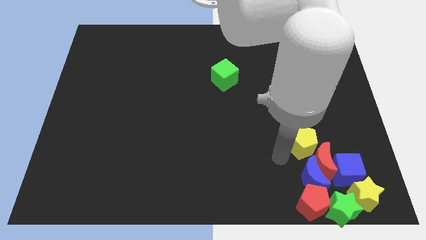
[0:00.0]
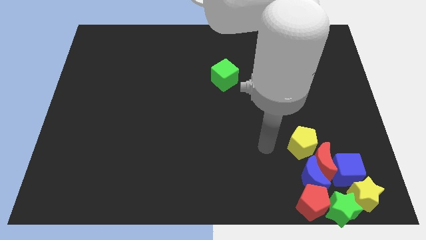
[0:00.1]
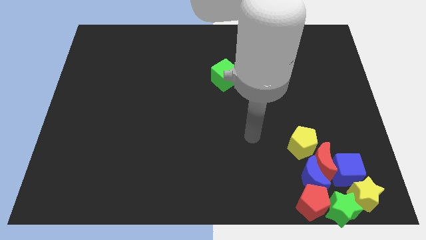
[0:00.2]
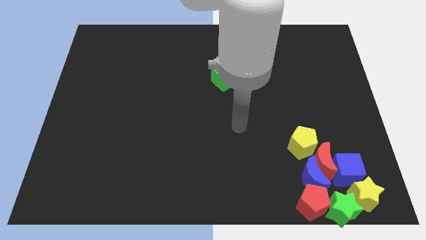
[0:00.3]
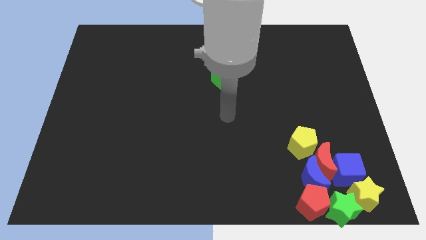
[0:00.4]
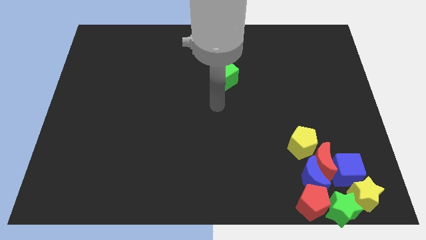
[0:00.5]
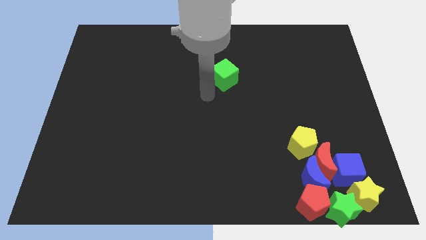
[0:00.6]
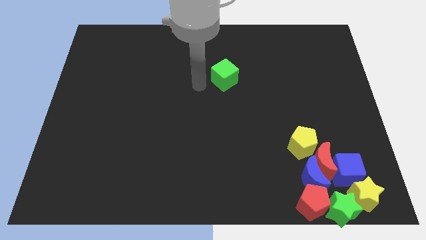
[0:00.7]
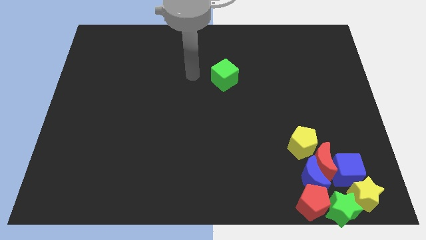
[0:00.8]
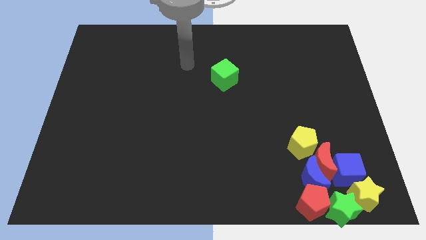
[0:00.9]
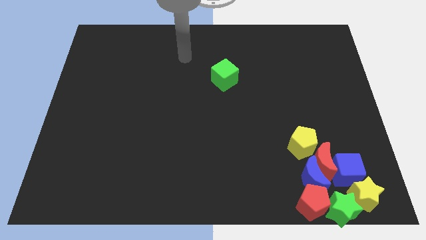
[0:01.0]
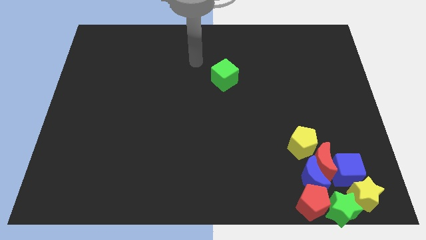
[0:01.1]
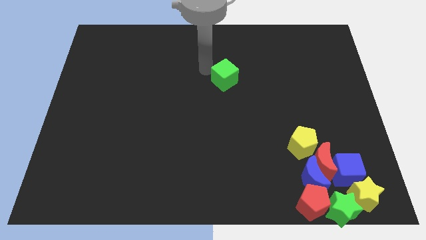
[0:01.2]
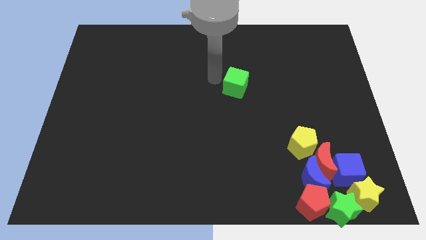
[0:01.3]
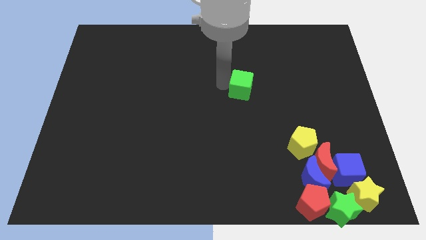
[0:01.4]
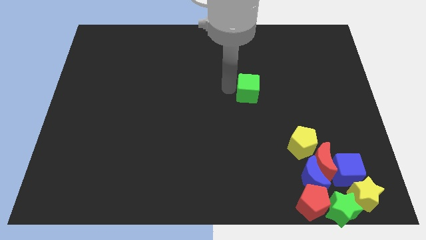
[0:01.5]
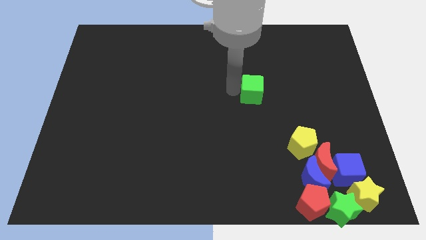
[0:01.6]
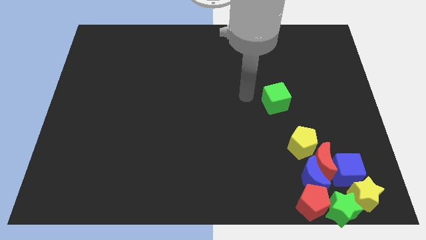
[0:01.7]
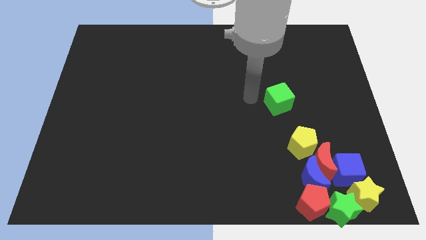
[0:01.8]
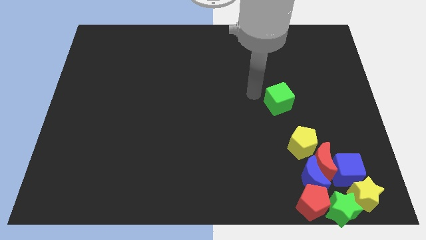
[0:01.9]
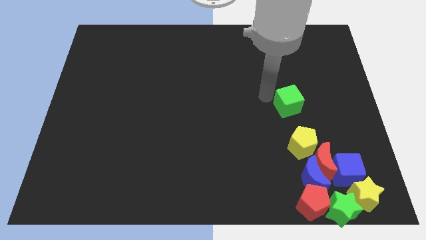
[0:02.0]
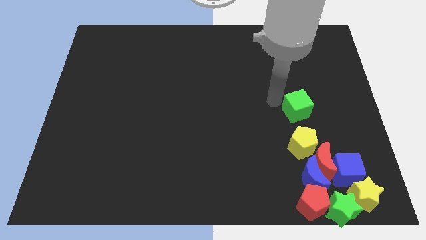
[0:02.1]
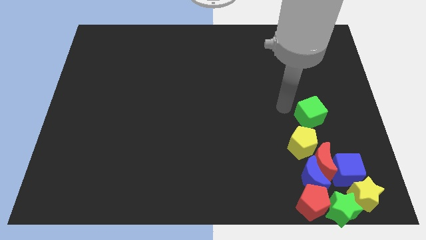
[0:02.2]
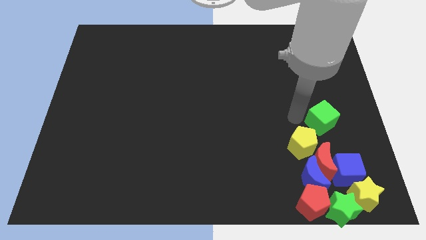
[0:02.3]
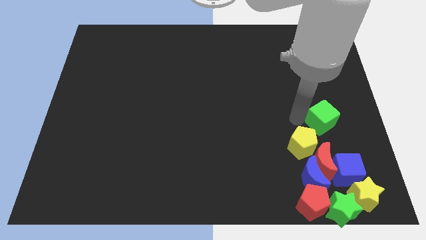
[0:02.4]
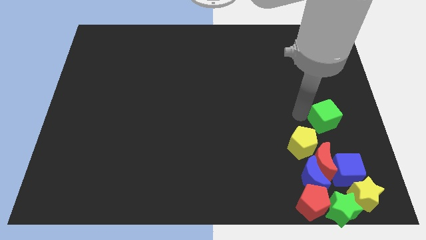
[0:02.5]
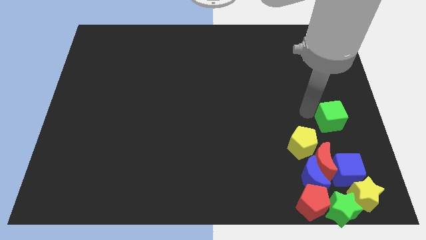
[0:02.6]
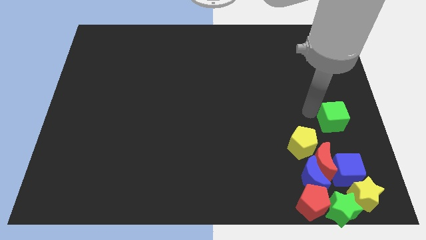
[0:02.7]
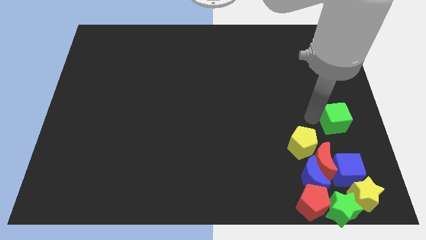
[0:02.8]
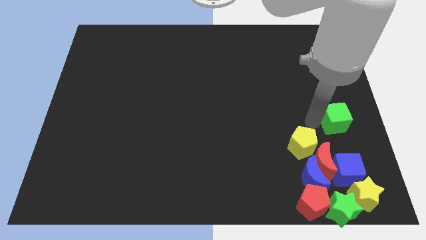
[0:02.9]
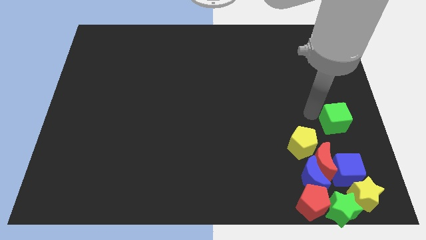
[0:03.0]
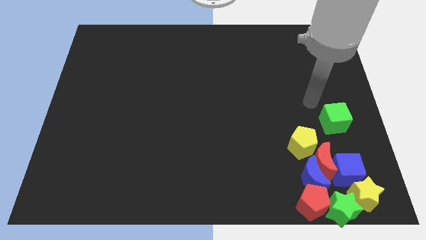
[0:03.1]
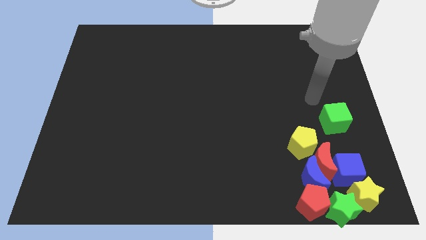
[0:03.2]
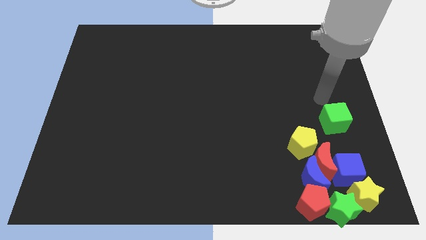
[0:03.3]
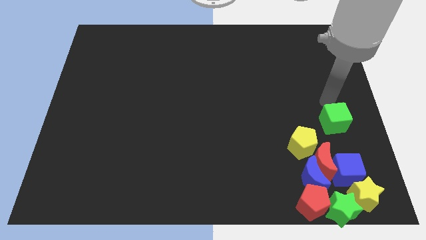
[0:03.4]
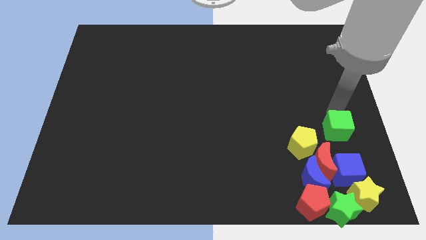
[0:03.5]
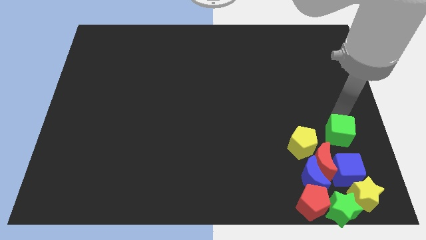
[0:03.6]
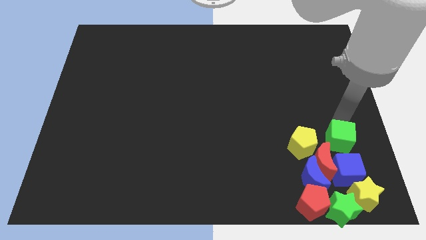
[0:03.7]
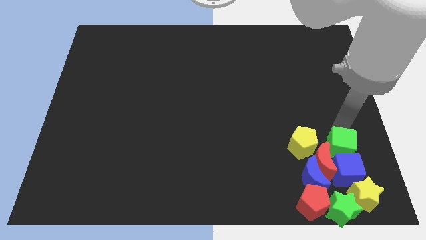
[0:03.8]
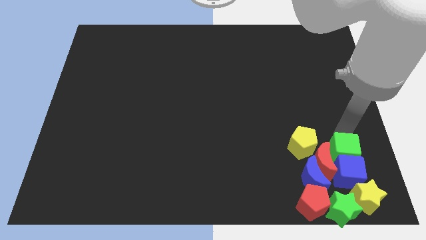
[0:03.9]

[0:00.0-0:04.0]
move the green cube into the top side of the blue cube

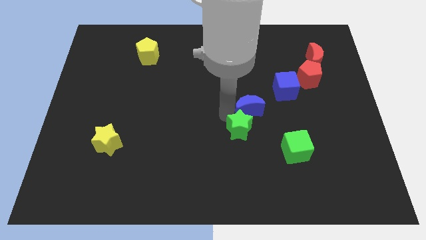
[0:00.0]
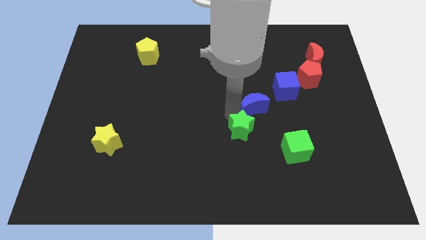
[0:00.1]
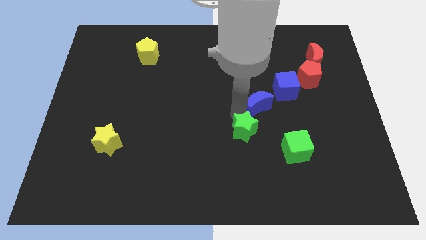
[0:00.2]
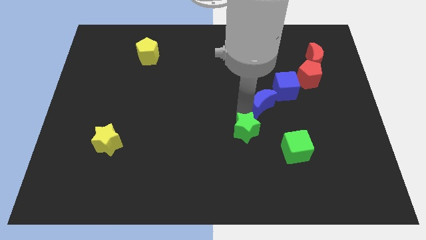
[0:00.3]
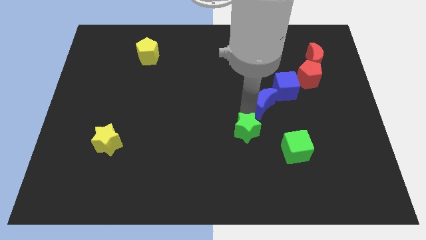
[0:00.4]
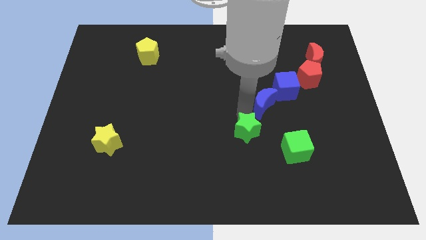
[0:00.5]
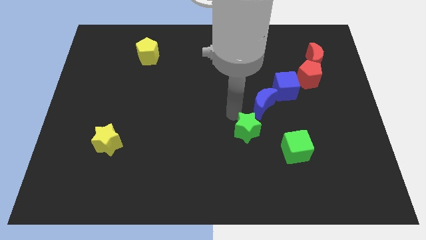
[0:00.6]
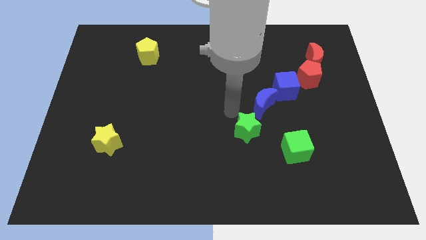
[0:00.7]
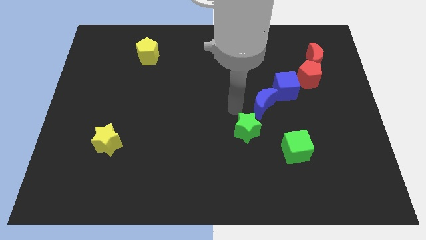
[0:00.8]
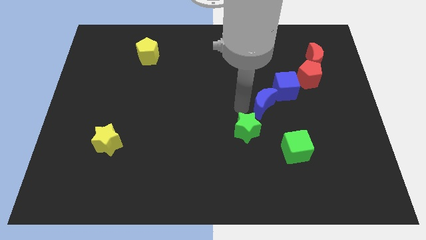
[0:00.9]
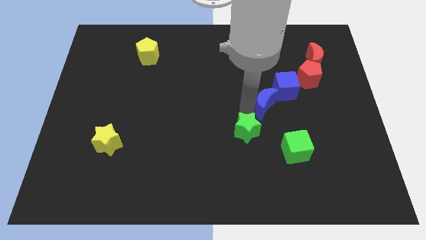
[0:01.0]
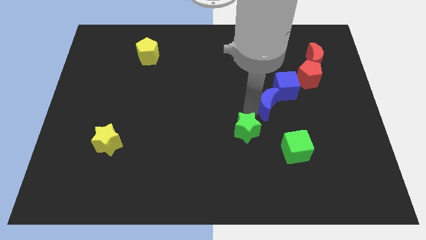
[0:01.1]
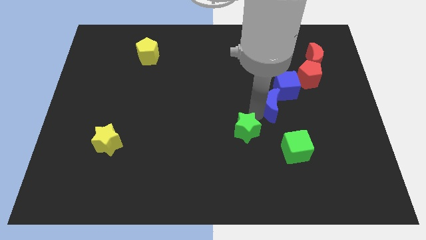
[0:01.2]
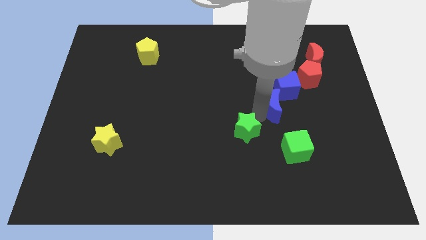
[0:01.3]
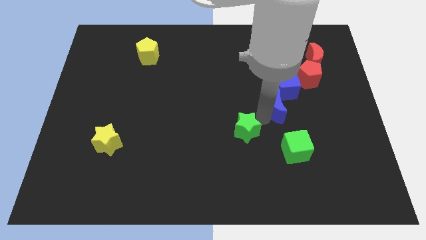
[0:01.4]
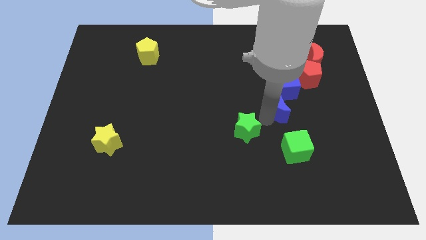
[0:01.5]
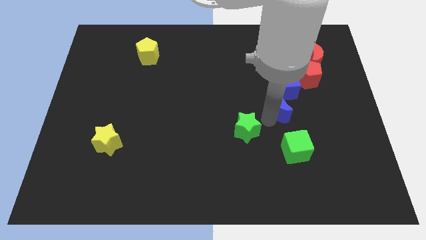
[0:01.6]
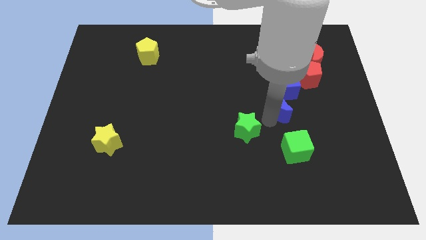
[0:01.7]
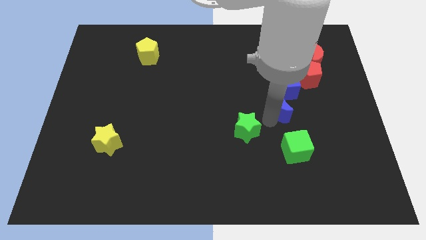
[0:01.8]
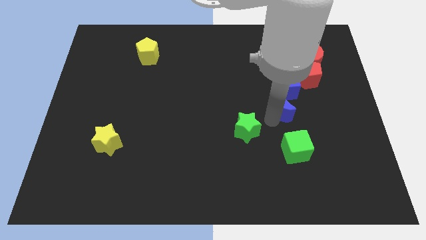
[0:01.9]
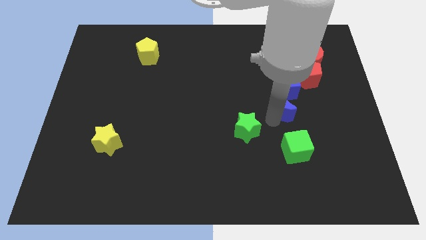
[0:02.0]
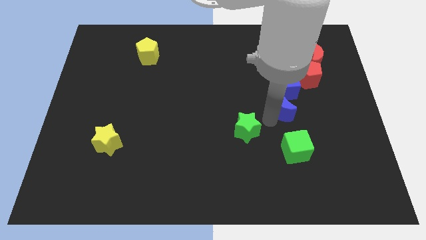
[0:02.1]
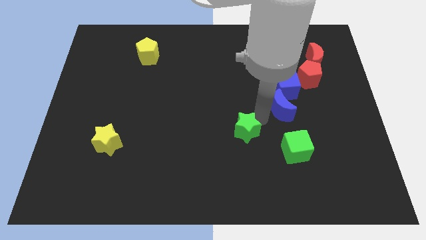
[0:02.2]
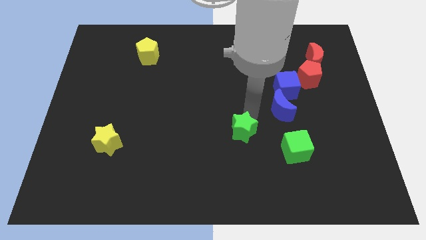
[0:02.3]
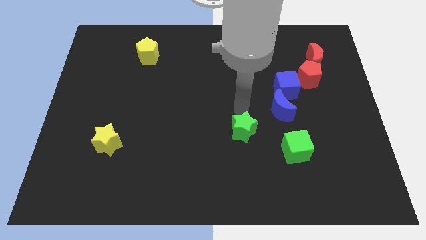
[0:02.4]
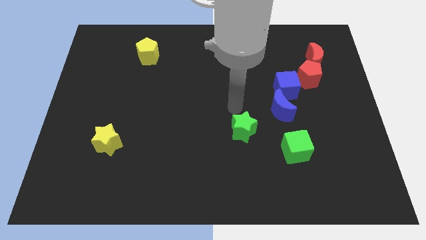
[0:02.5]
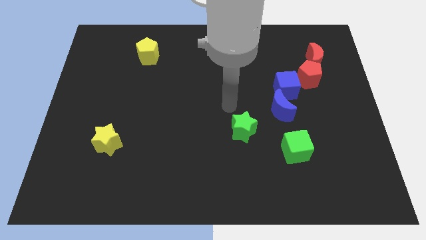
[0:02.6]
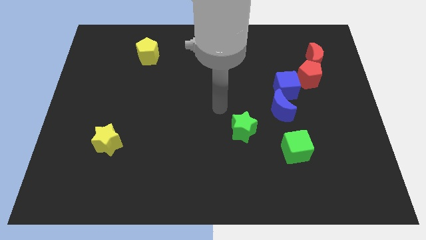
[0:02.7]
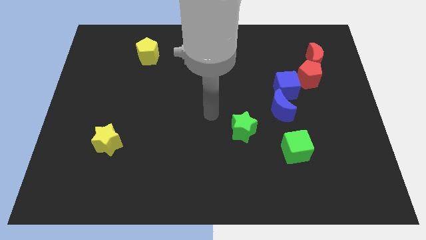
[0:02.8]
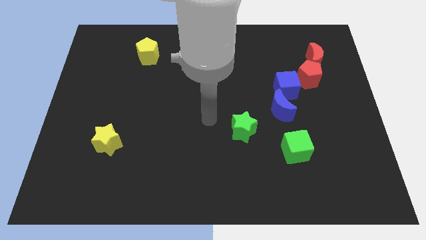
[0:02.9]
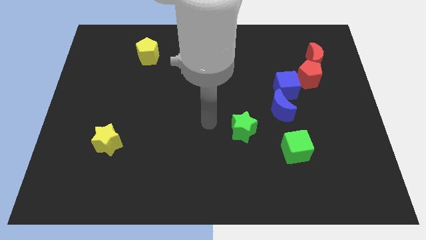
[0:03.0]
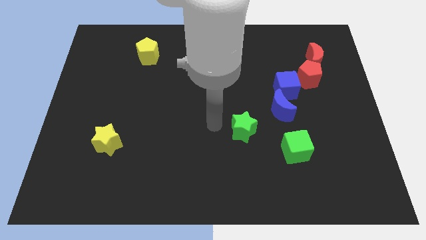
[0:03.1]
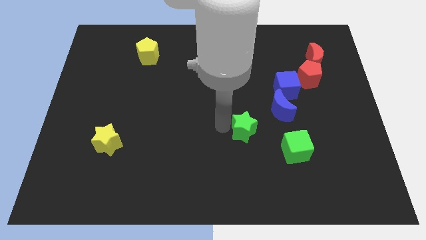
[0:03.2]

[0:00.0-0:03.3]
separate green star and the blue moon

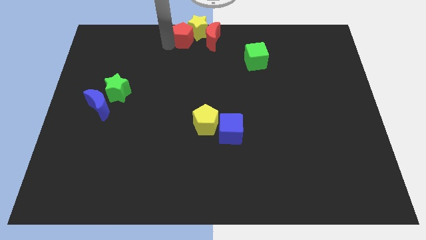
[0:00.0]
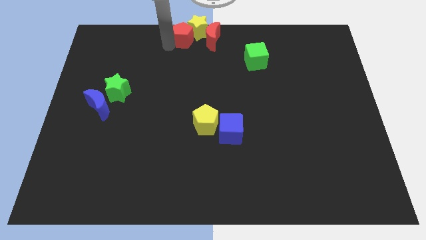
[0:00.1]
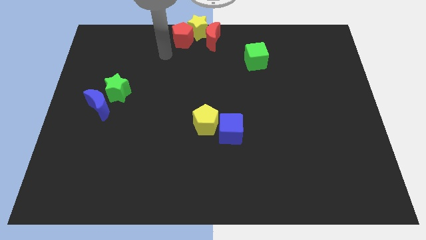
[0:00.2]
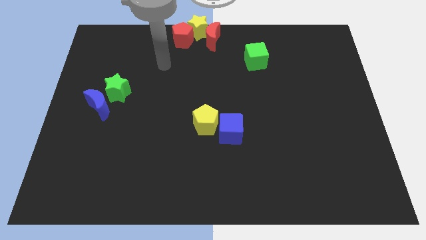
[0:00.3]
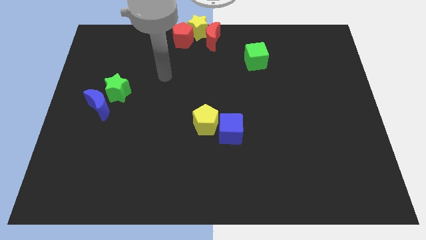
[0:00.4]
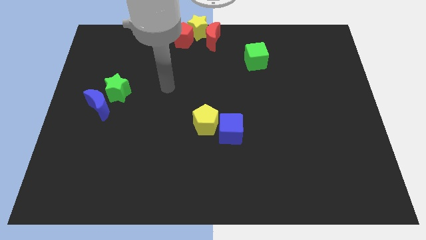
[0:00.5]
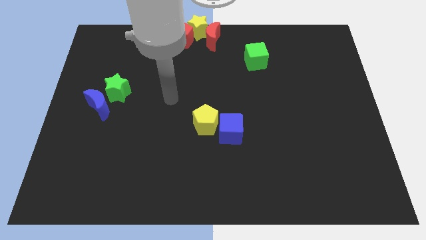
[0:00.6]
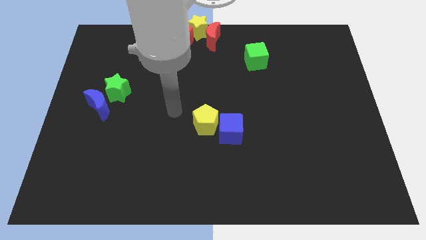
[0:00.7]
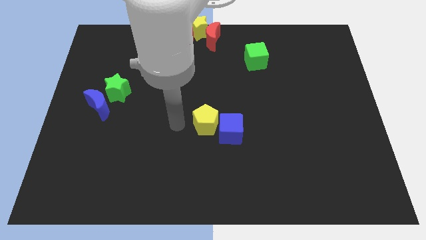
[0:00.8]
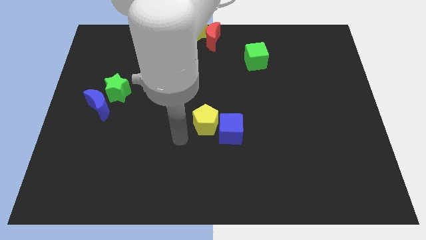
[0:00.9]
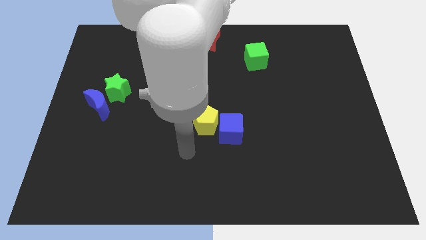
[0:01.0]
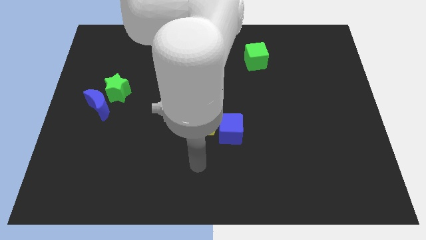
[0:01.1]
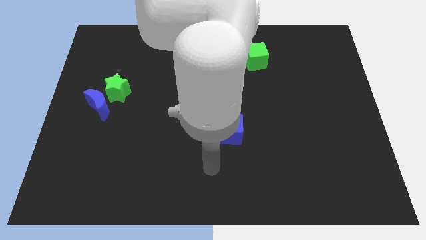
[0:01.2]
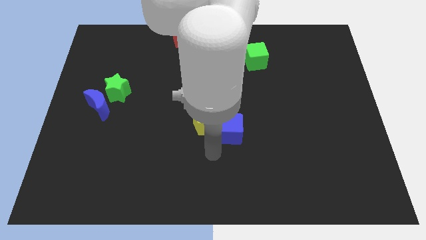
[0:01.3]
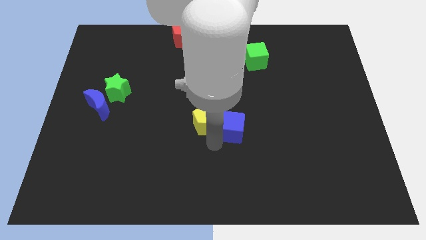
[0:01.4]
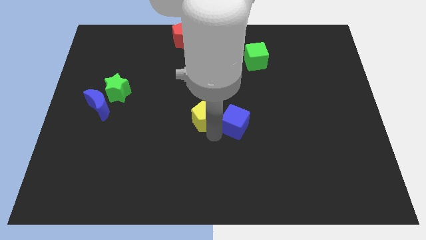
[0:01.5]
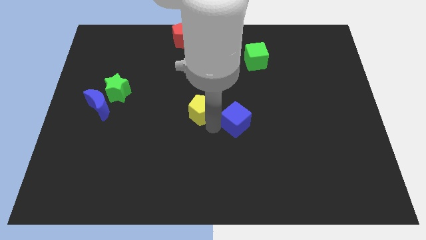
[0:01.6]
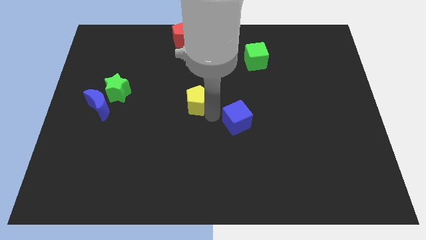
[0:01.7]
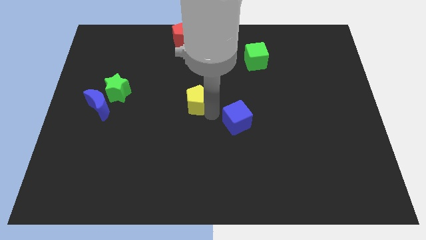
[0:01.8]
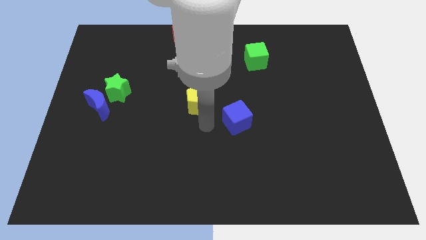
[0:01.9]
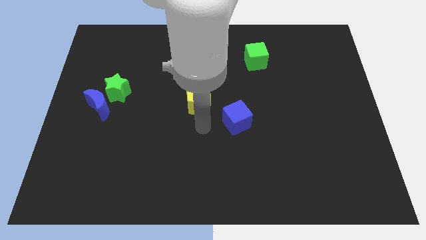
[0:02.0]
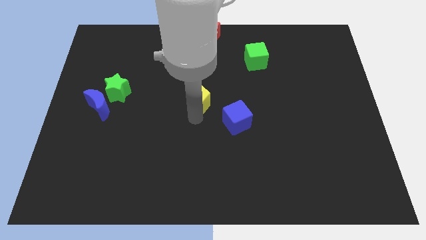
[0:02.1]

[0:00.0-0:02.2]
separate the yellow pentagon and blue cube
